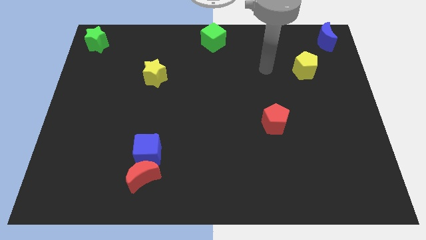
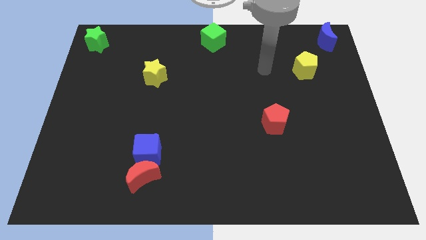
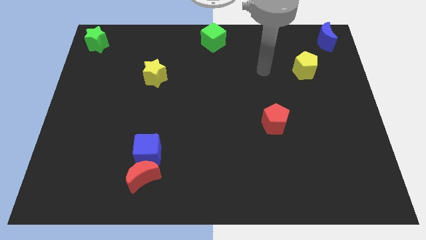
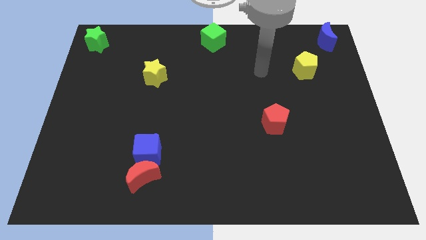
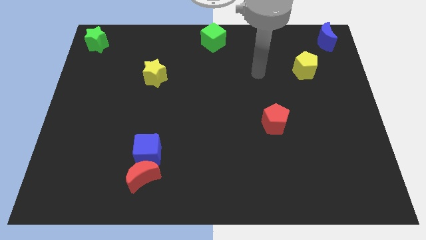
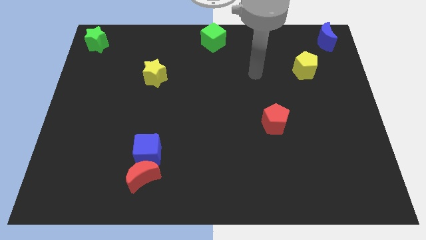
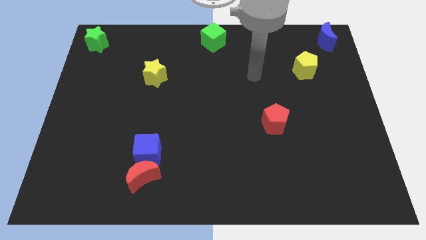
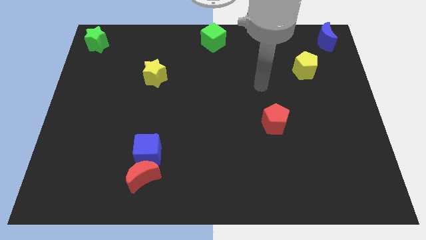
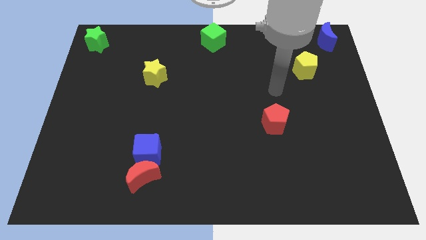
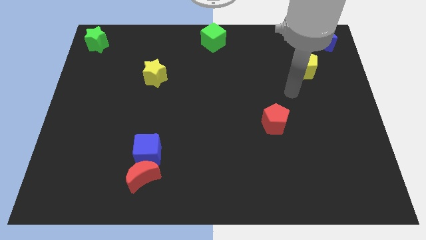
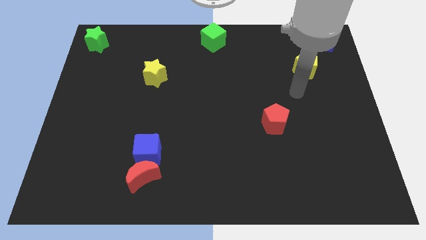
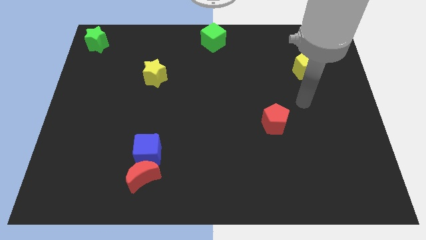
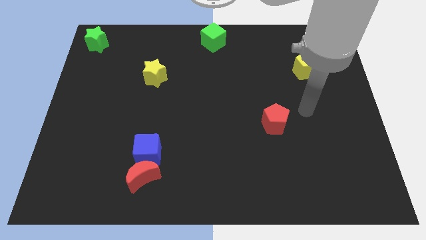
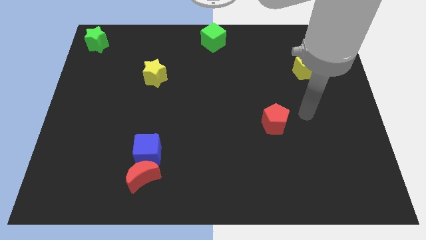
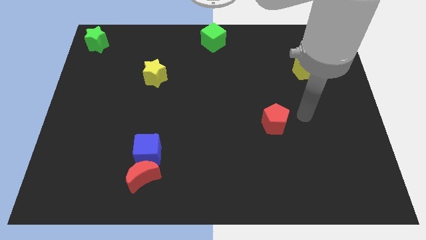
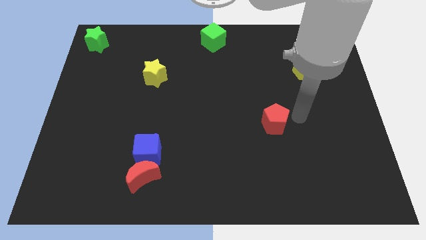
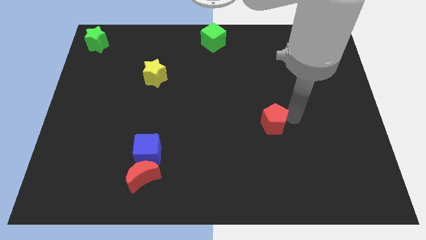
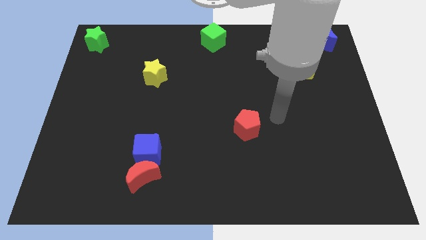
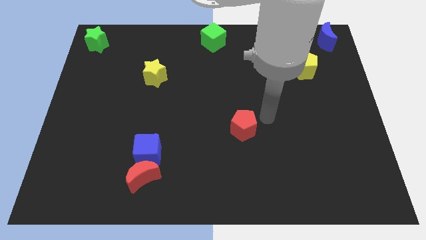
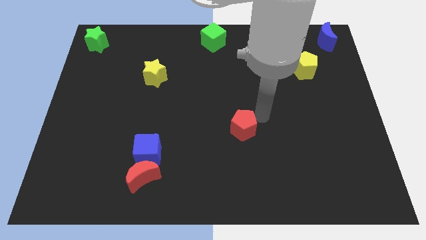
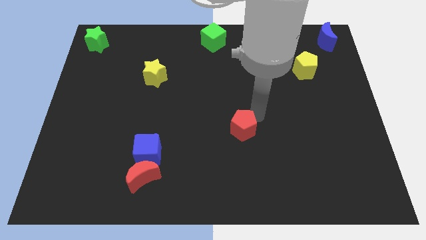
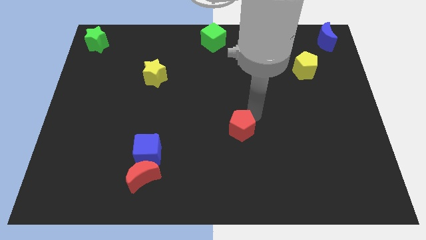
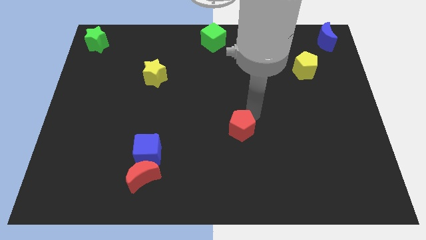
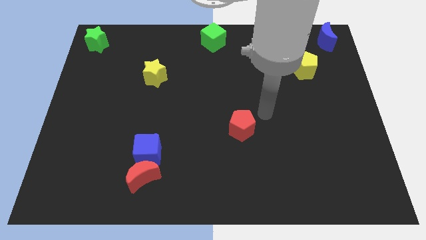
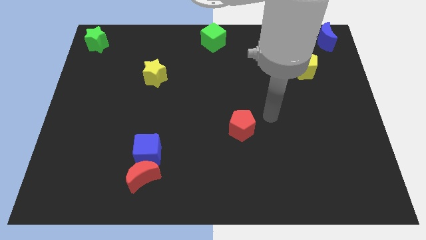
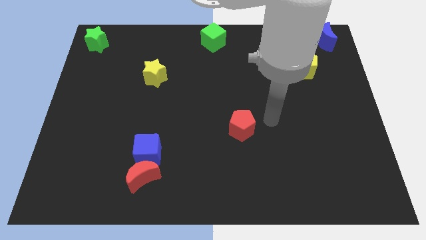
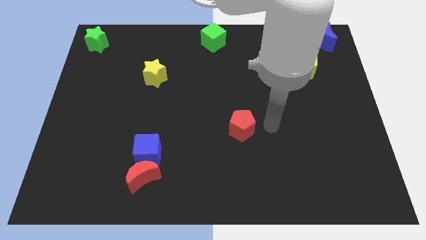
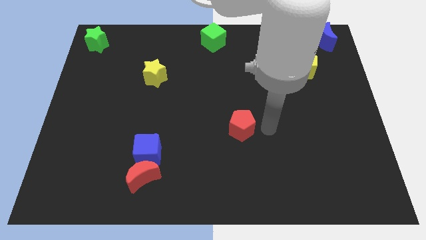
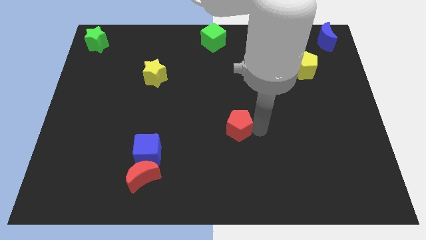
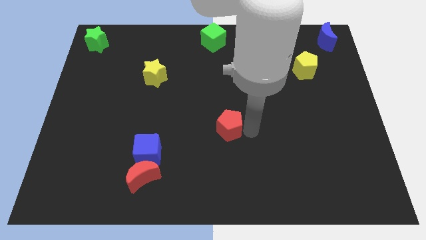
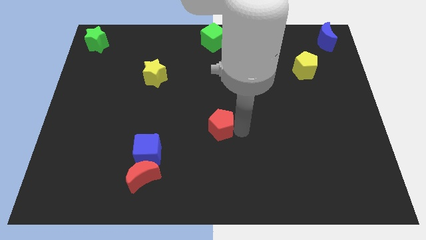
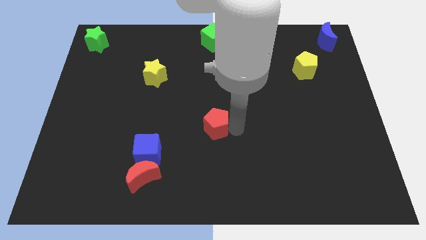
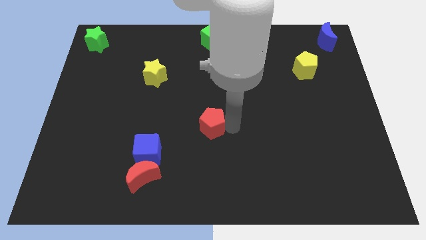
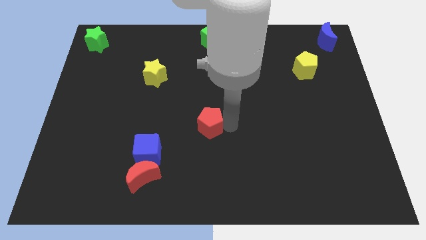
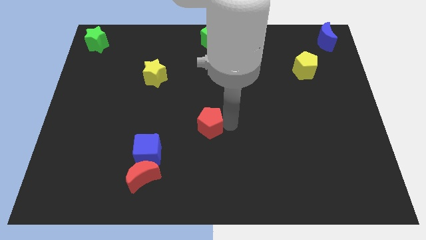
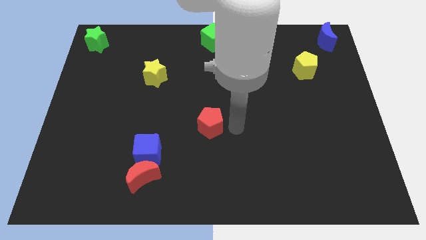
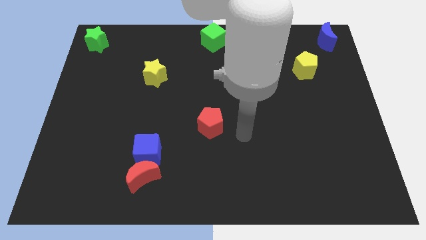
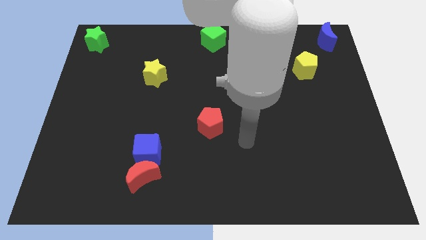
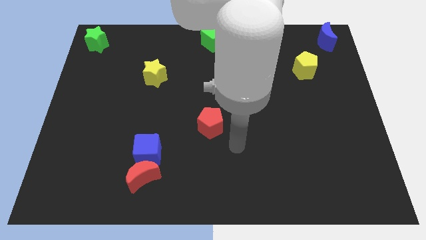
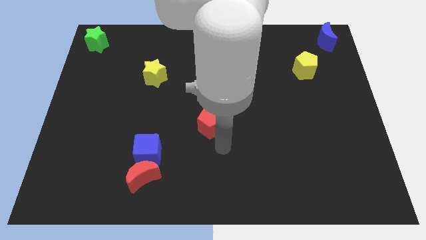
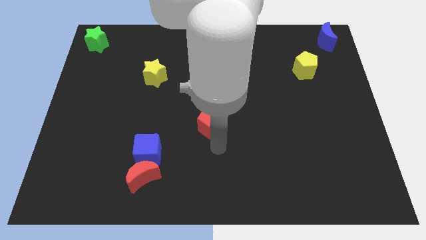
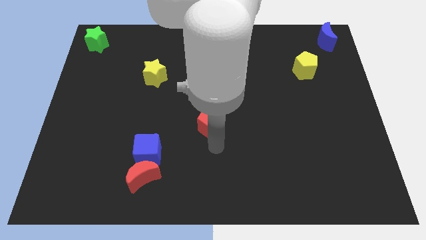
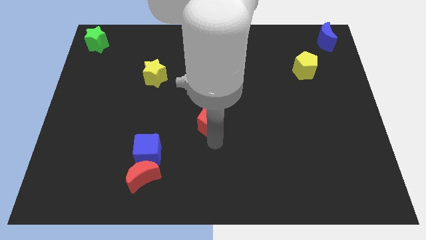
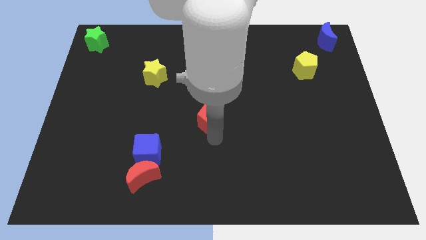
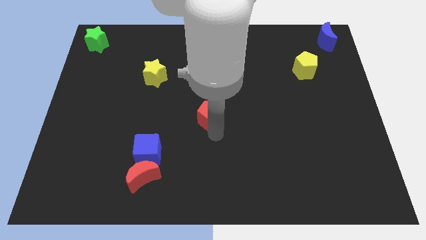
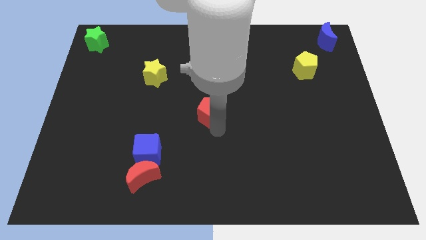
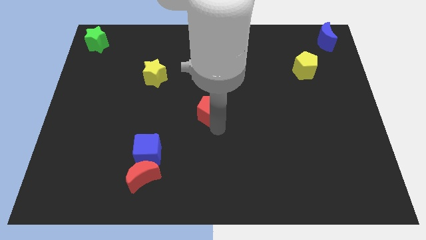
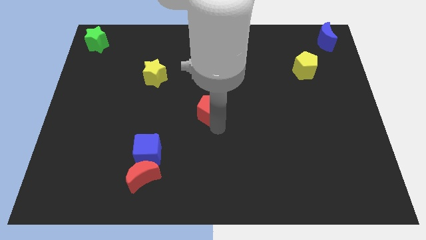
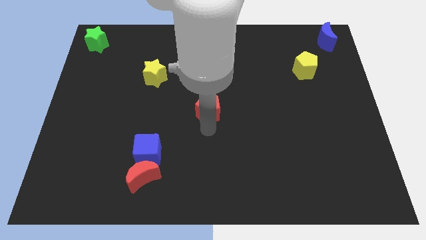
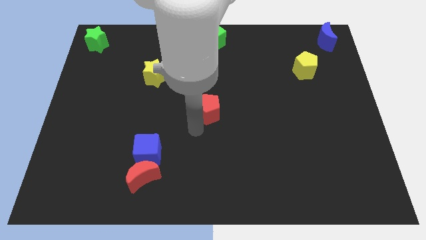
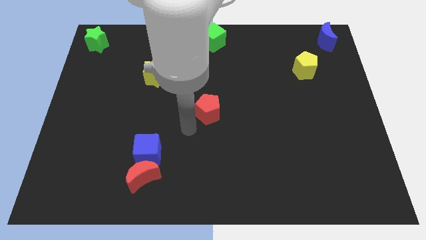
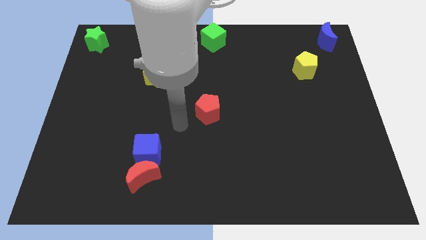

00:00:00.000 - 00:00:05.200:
adjust the red pentagon position at the center of the board

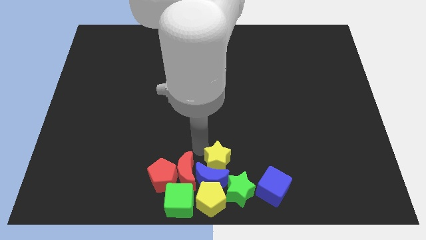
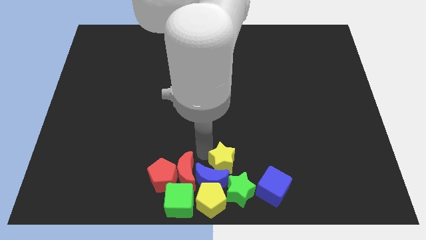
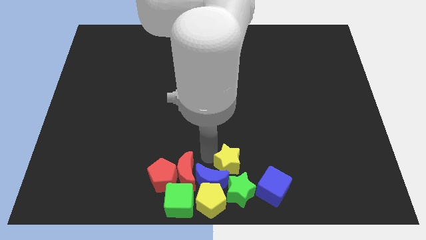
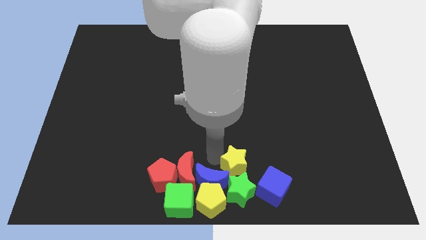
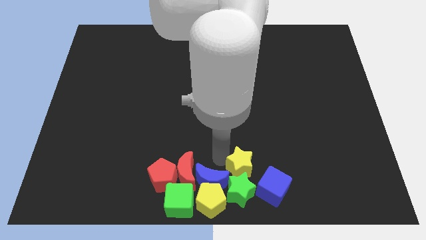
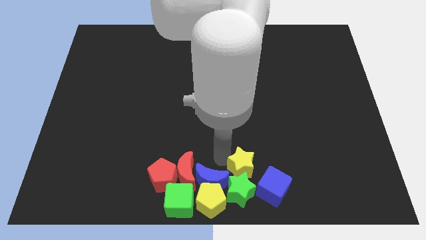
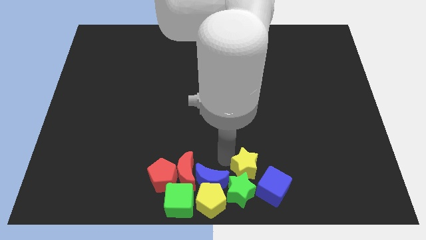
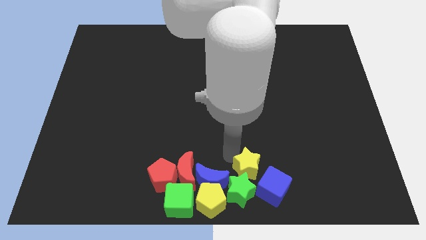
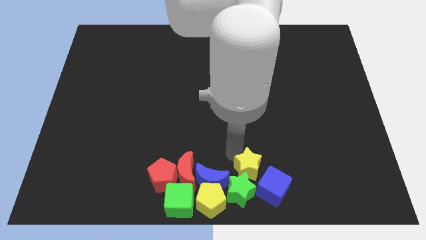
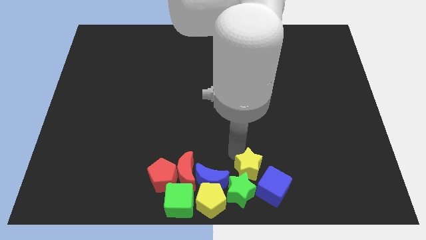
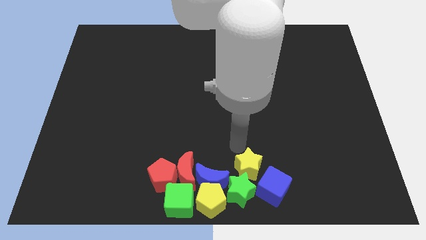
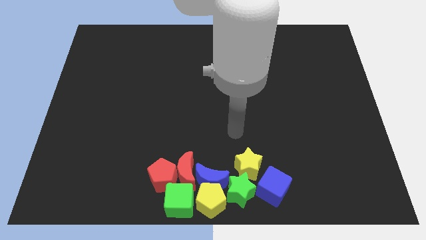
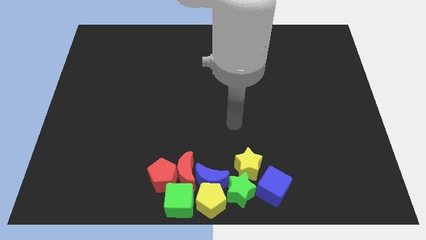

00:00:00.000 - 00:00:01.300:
place yellow star above green star

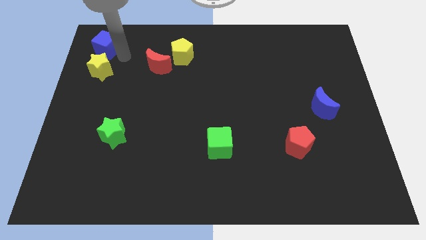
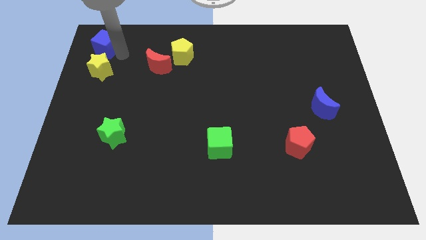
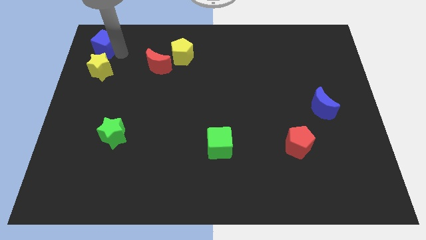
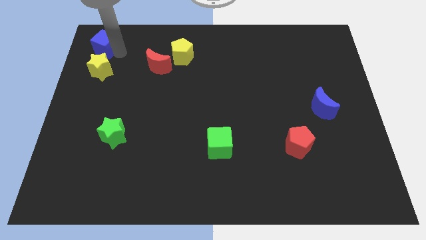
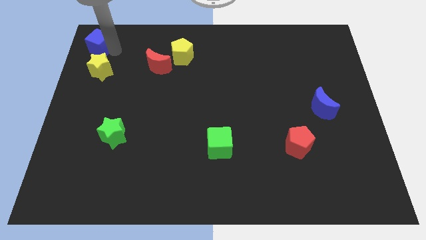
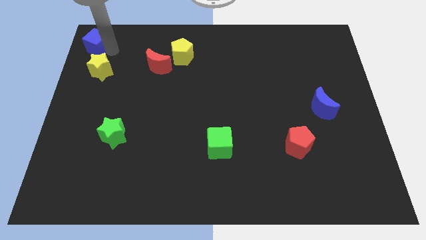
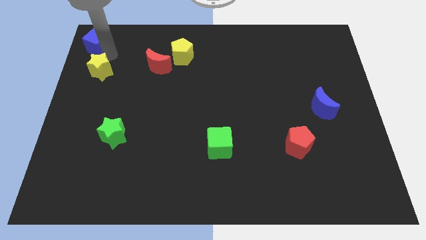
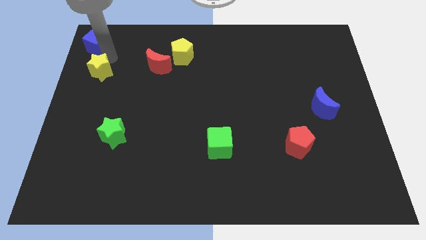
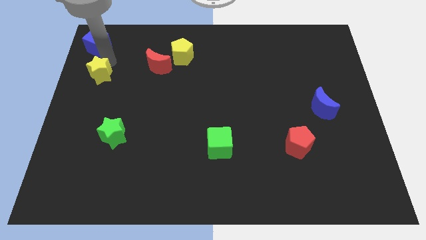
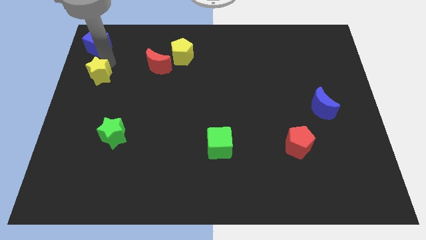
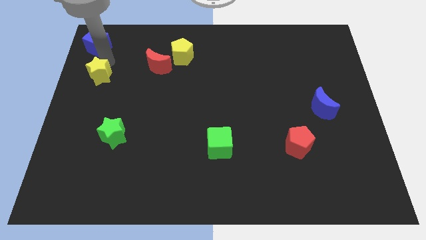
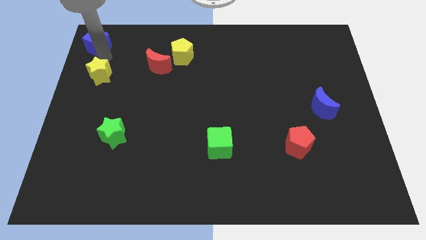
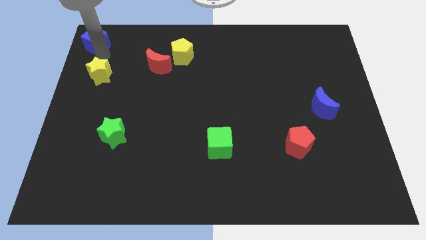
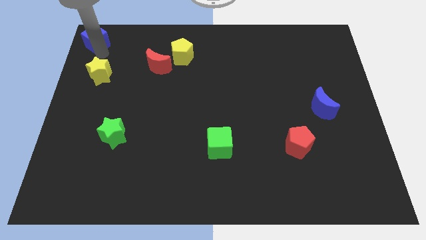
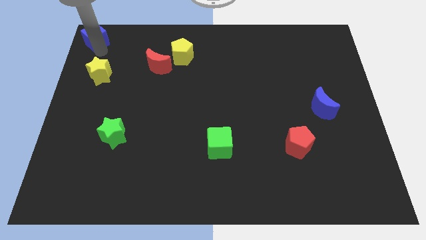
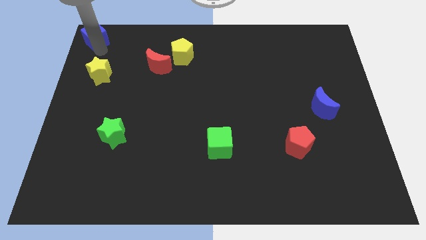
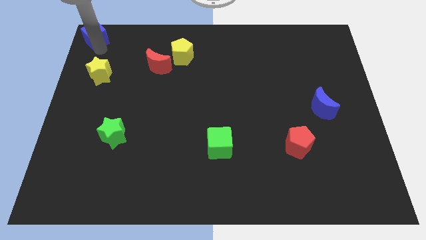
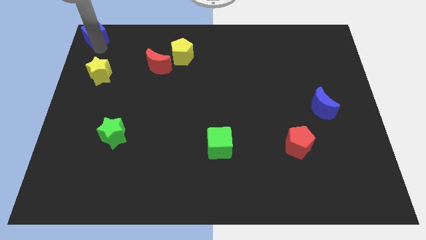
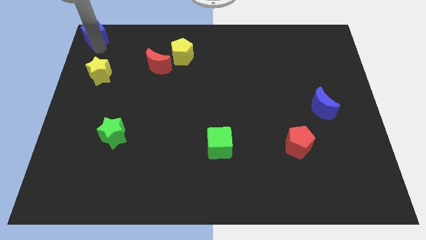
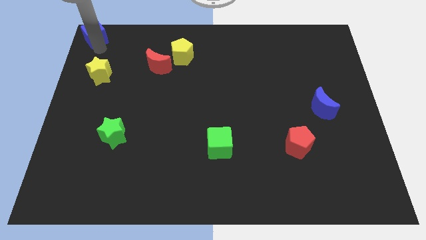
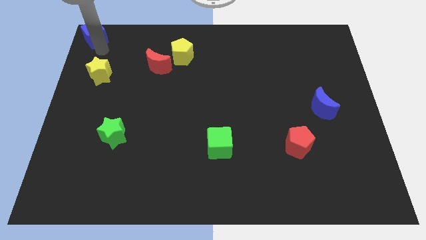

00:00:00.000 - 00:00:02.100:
push the blue cube to the top left of the board

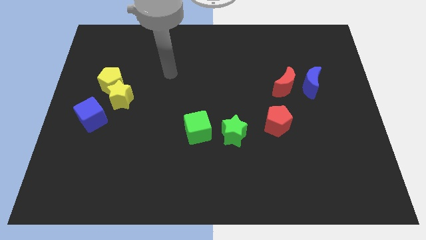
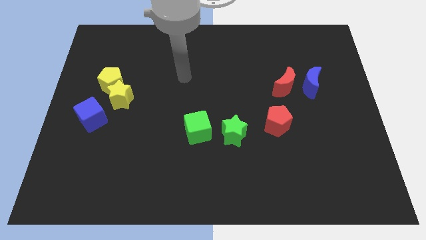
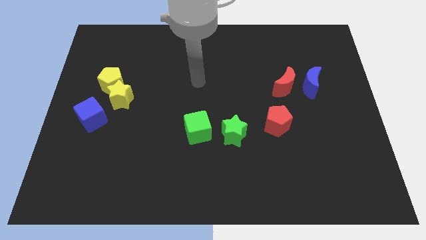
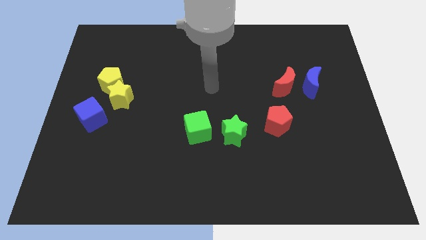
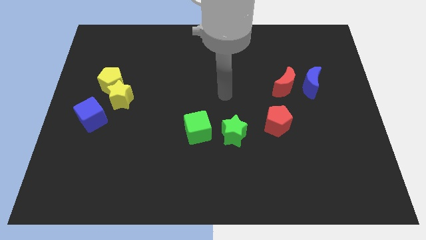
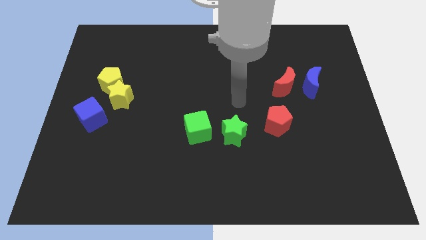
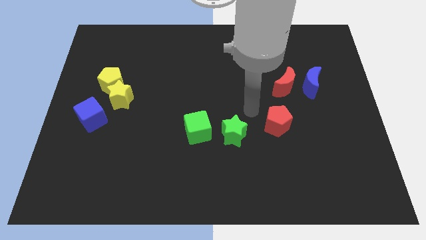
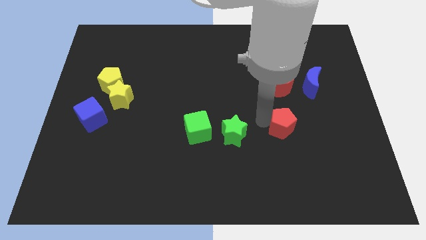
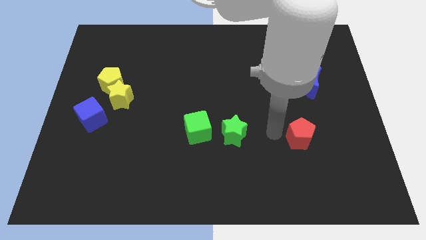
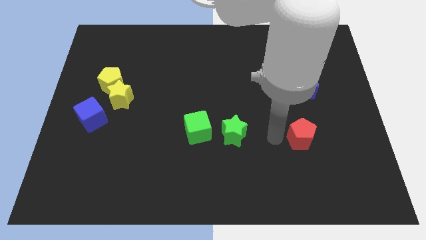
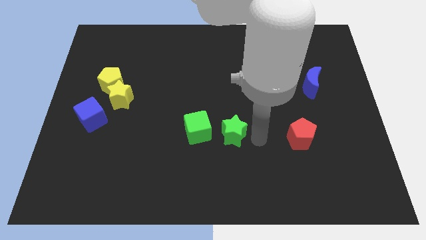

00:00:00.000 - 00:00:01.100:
push the red pentagon downwards slightly to the right
